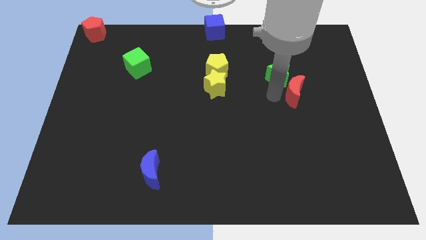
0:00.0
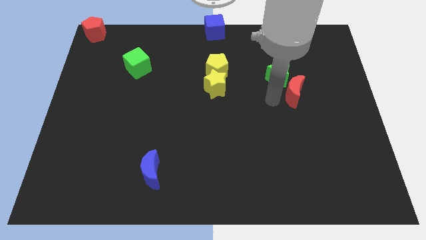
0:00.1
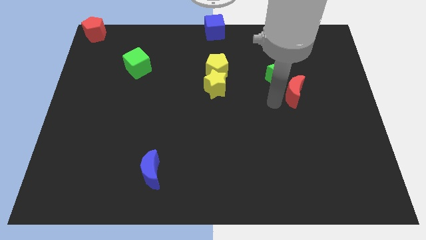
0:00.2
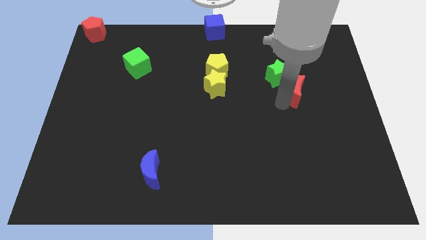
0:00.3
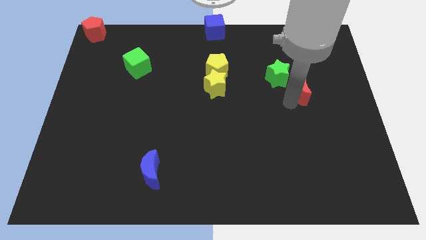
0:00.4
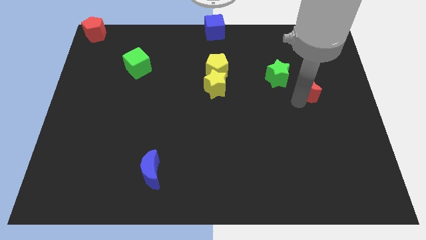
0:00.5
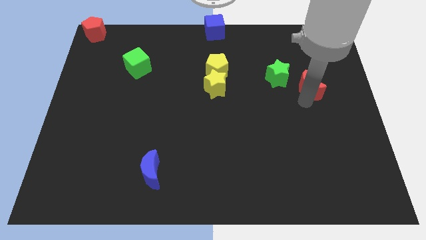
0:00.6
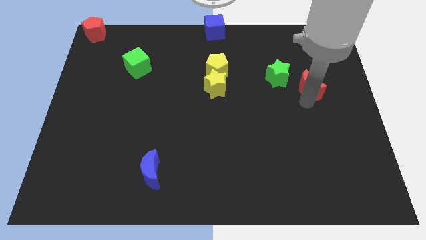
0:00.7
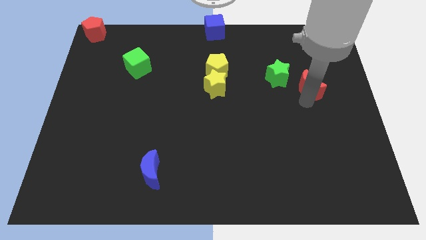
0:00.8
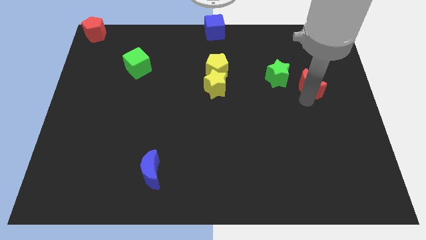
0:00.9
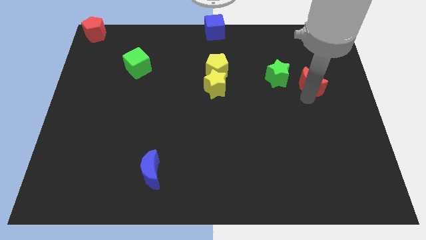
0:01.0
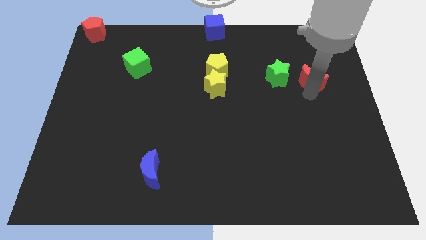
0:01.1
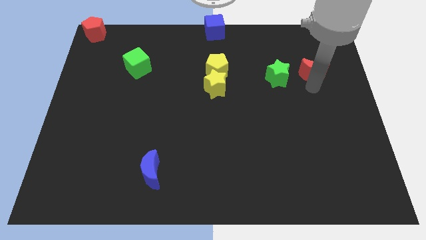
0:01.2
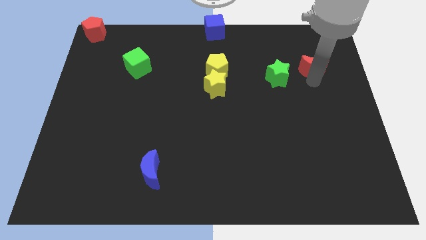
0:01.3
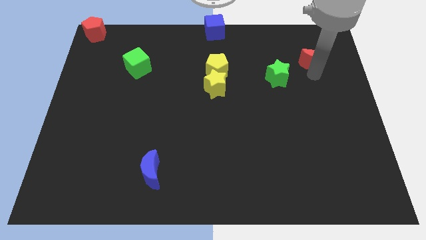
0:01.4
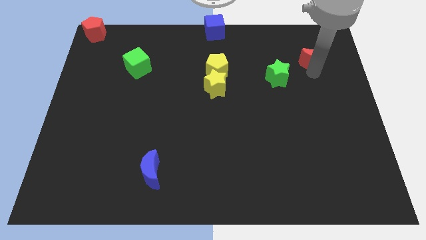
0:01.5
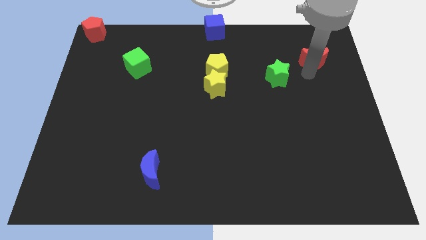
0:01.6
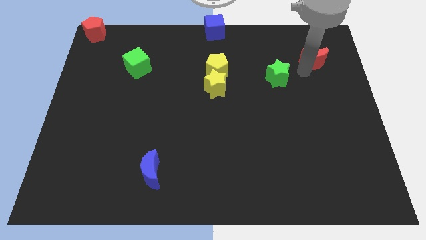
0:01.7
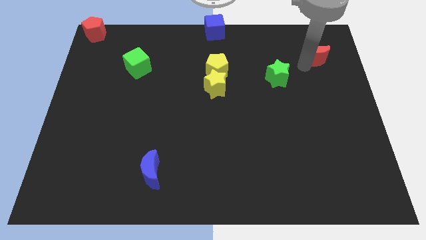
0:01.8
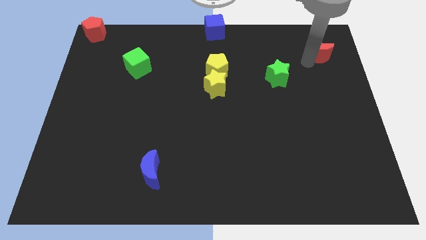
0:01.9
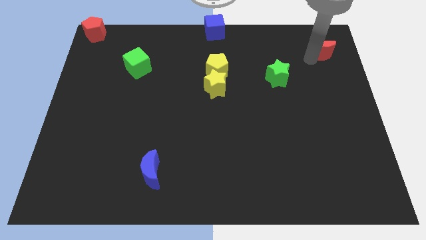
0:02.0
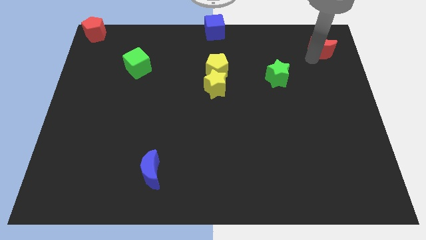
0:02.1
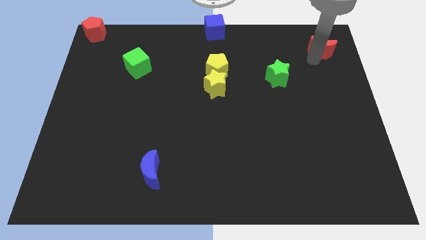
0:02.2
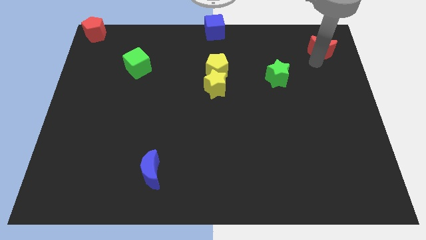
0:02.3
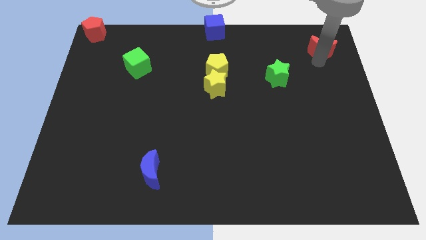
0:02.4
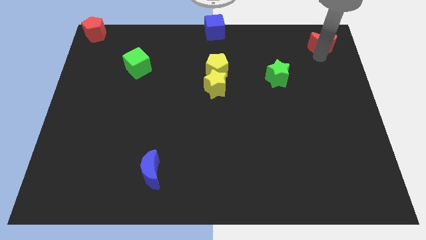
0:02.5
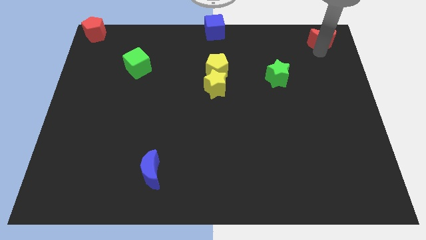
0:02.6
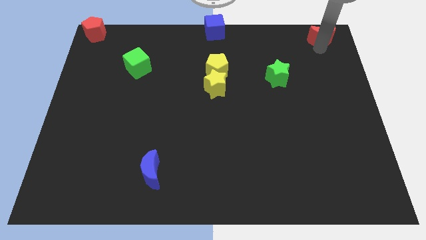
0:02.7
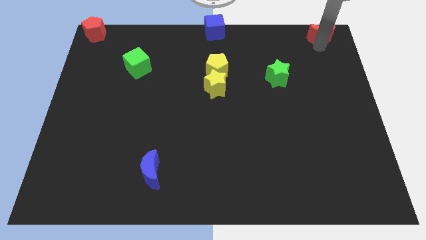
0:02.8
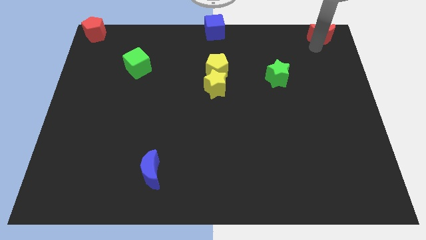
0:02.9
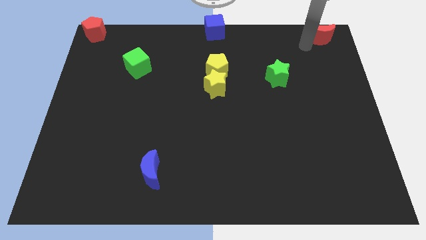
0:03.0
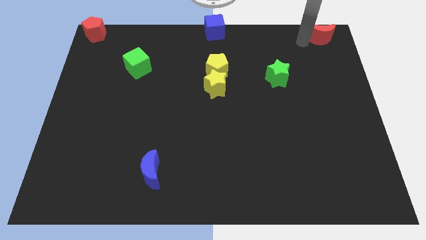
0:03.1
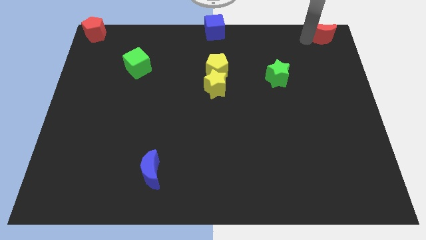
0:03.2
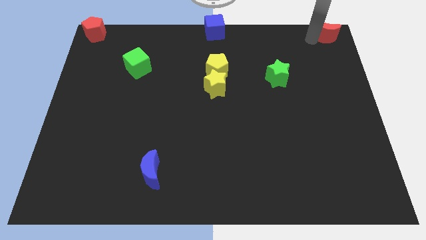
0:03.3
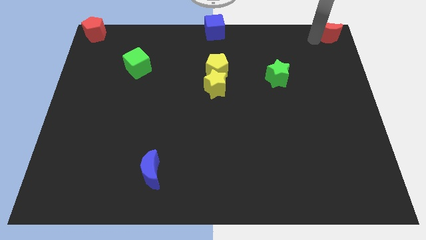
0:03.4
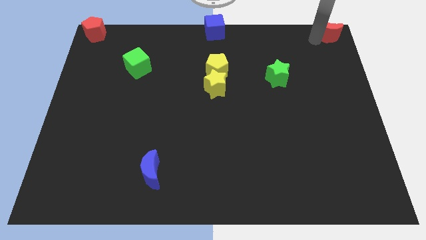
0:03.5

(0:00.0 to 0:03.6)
move the red crescent to the top right corner of the board

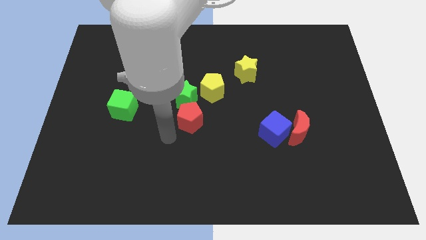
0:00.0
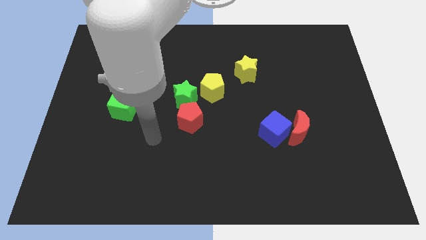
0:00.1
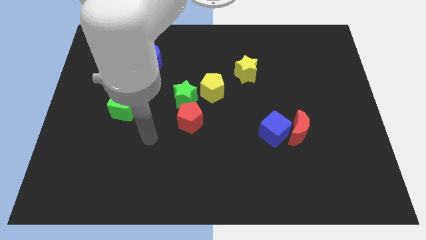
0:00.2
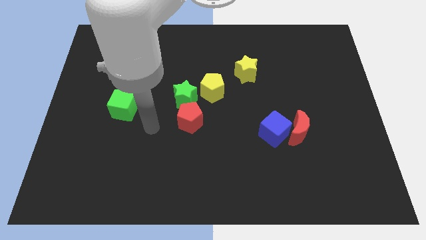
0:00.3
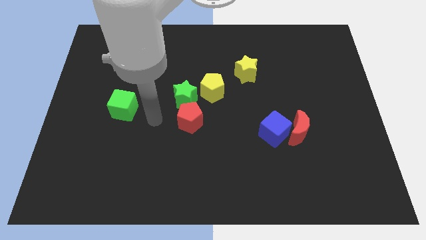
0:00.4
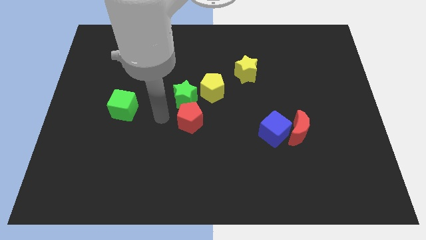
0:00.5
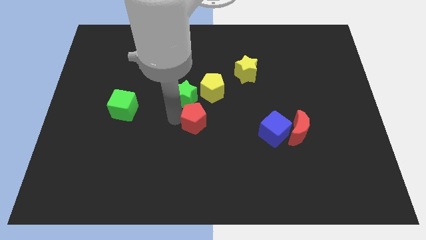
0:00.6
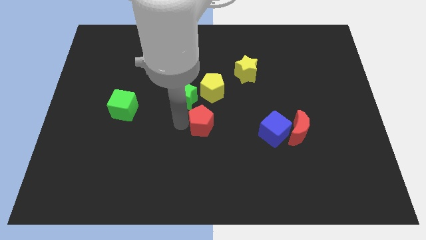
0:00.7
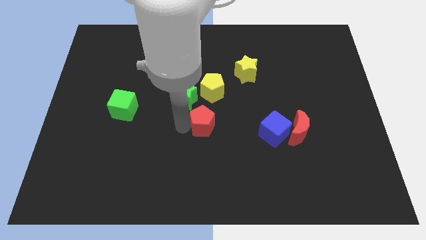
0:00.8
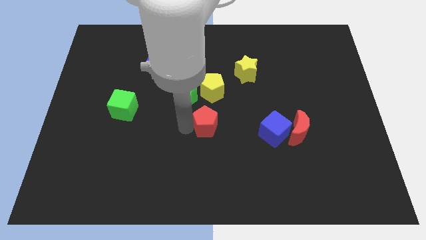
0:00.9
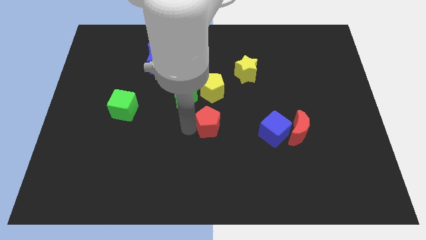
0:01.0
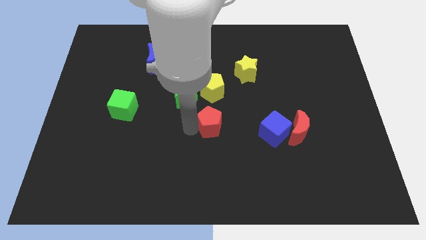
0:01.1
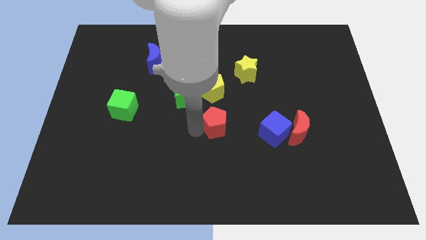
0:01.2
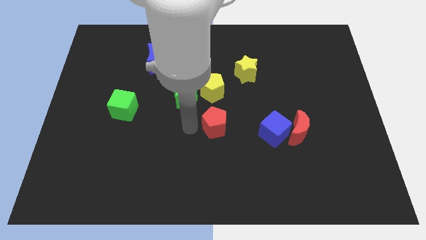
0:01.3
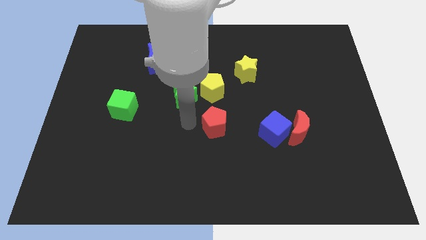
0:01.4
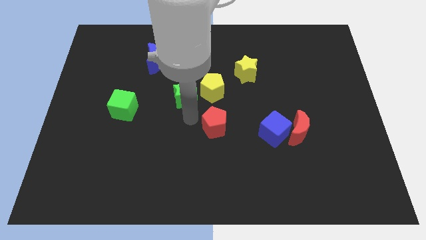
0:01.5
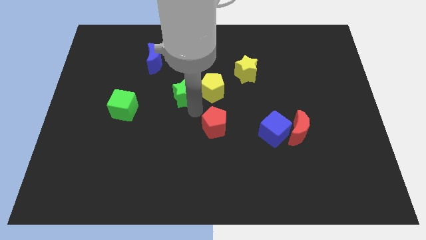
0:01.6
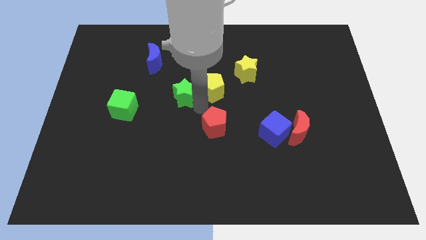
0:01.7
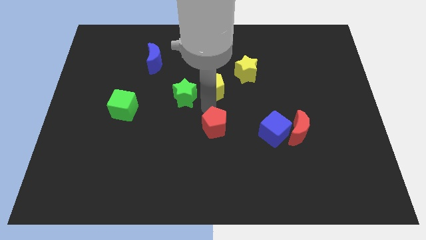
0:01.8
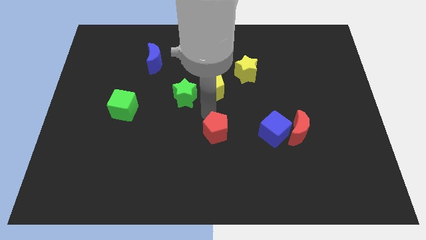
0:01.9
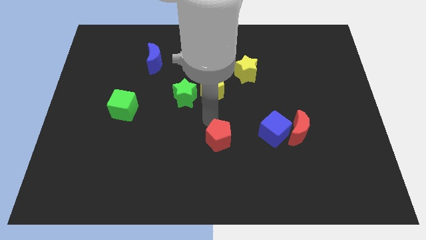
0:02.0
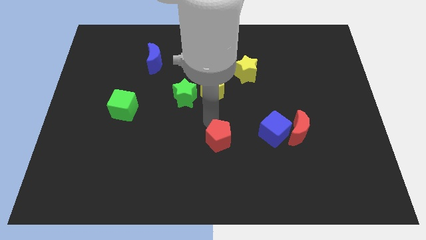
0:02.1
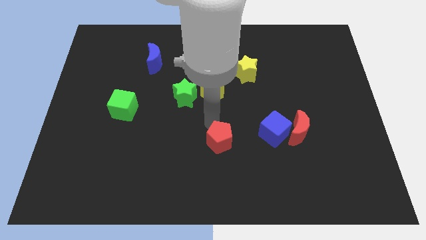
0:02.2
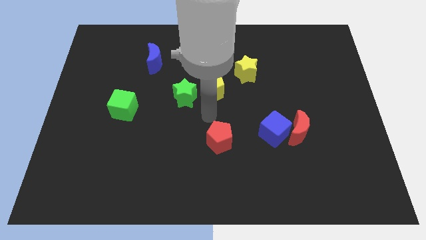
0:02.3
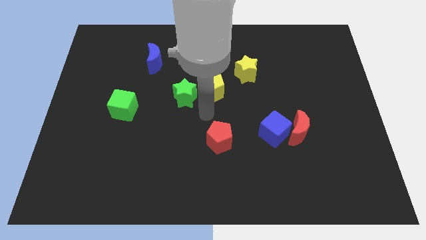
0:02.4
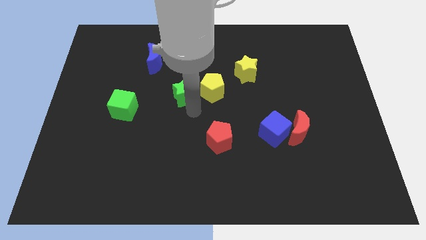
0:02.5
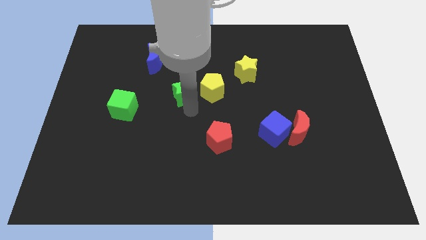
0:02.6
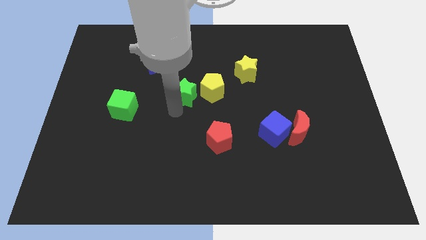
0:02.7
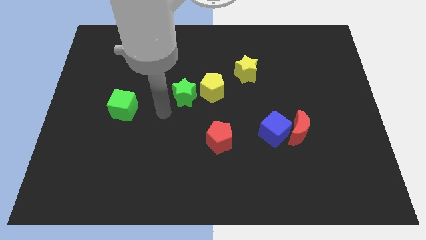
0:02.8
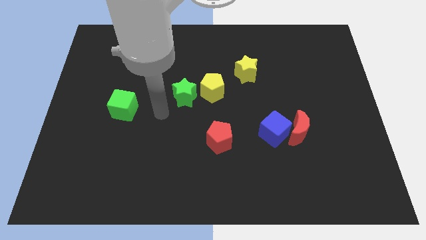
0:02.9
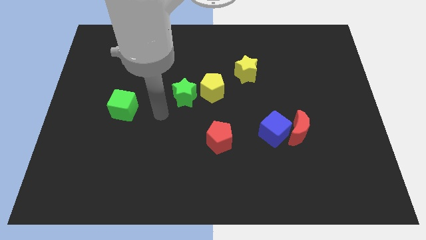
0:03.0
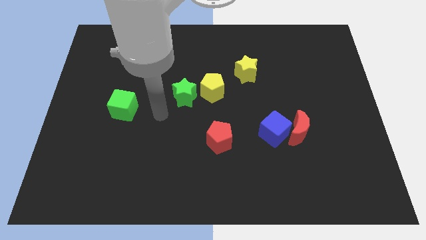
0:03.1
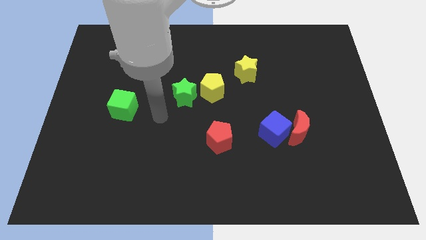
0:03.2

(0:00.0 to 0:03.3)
place the red pentagon vertically below the yellow pentagon

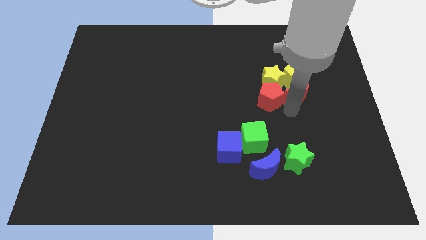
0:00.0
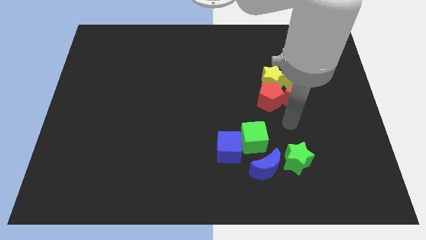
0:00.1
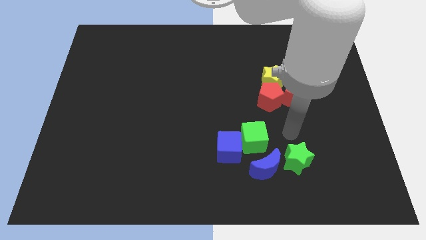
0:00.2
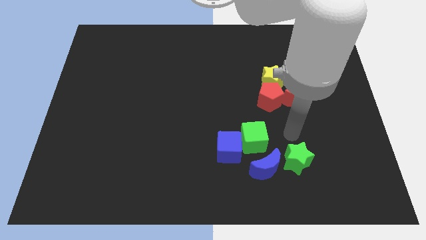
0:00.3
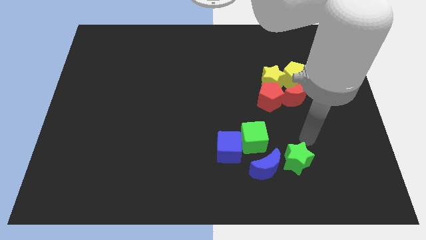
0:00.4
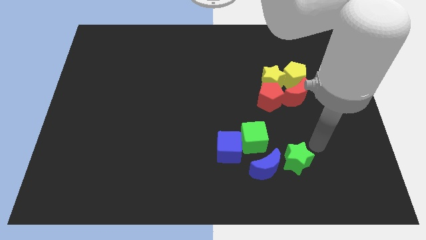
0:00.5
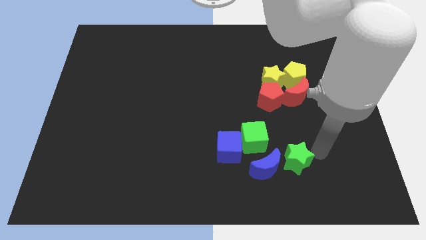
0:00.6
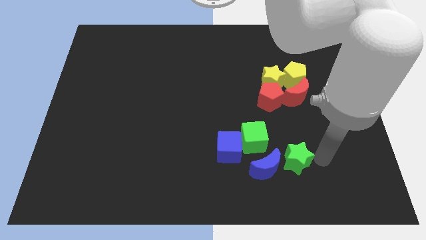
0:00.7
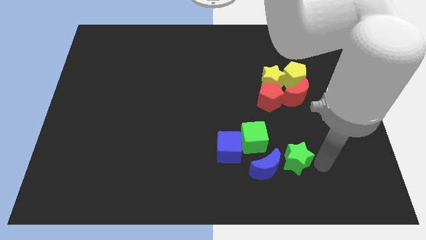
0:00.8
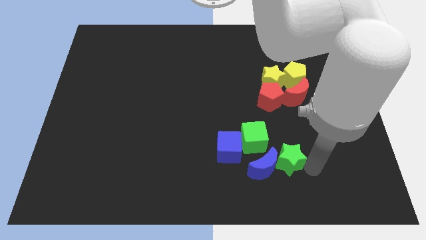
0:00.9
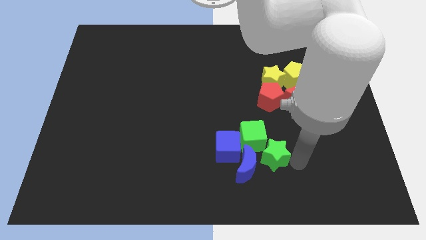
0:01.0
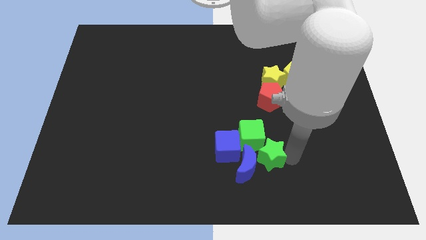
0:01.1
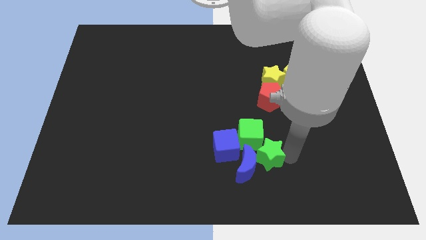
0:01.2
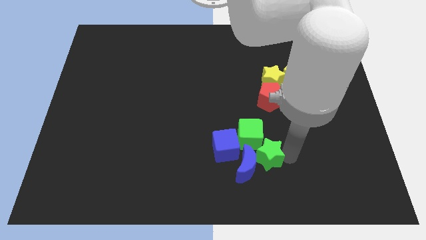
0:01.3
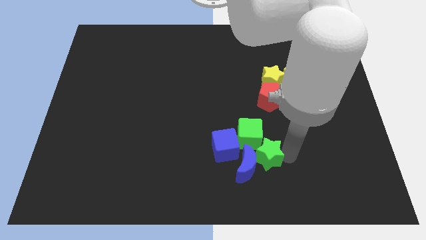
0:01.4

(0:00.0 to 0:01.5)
push the green star into the green cube

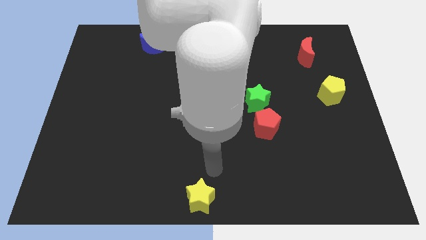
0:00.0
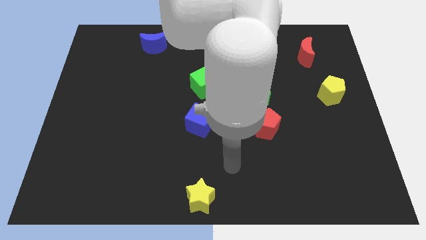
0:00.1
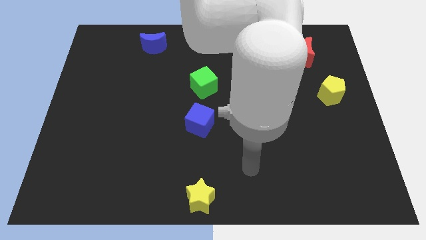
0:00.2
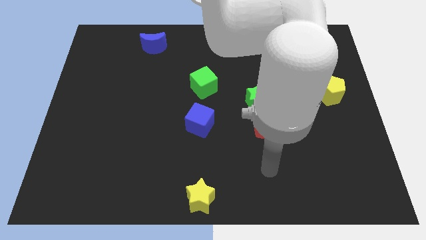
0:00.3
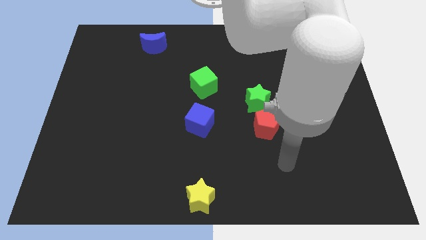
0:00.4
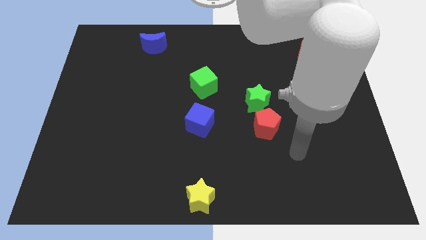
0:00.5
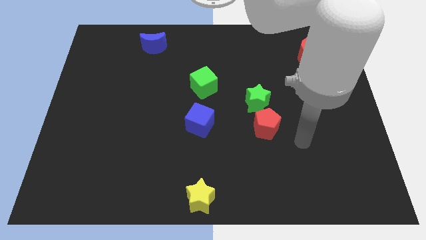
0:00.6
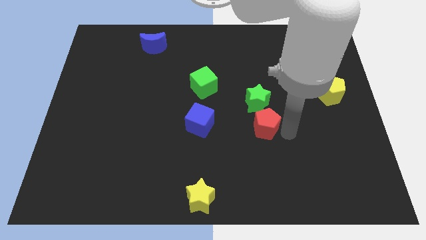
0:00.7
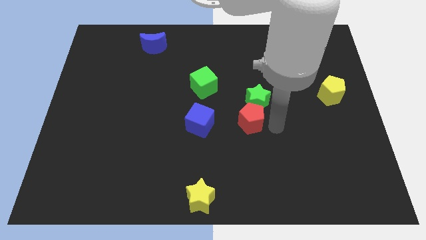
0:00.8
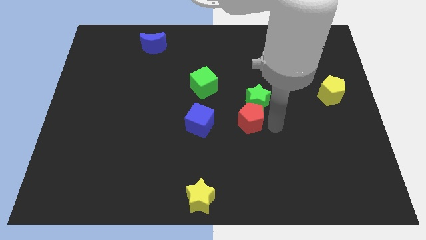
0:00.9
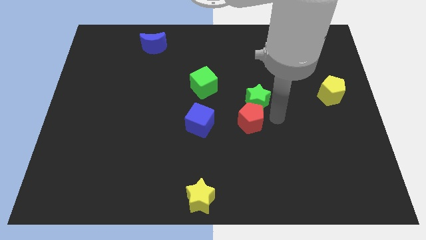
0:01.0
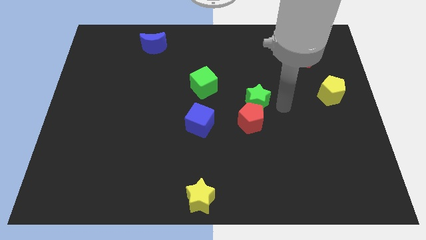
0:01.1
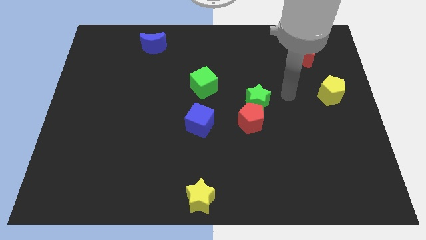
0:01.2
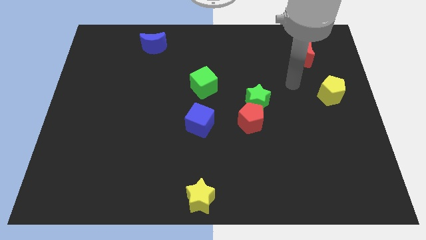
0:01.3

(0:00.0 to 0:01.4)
move the red pentagon towards the green star
